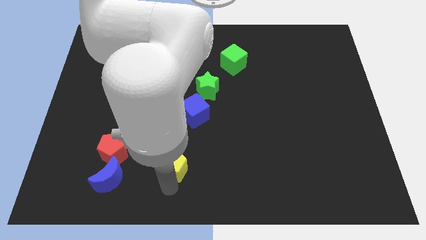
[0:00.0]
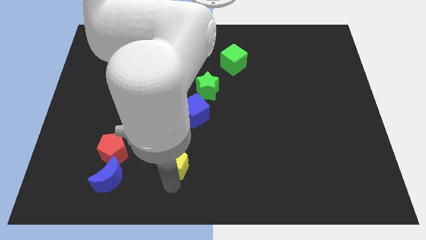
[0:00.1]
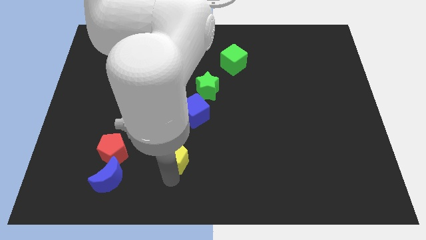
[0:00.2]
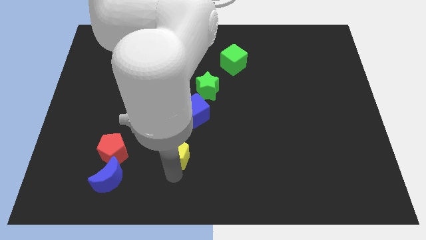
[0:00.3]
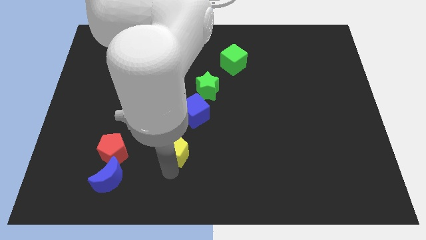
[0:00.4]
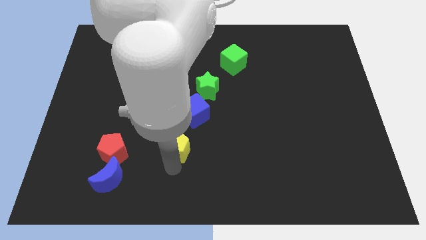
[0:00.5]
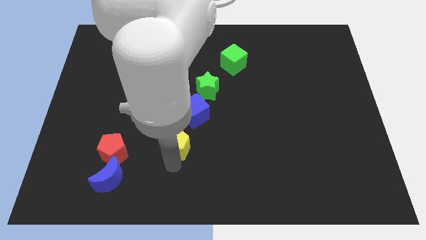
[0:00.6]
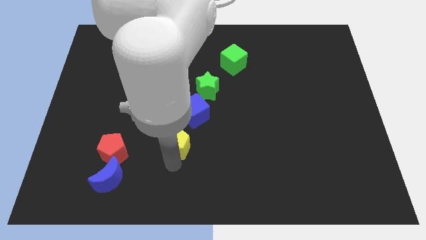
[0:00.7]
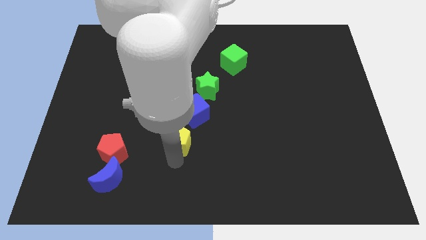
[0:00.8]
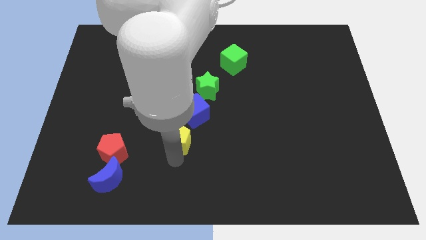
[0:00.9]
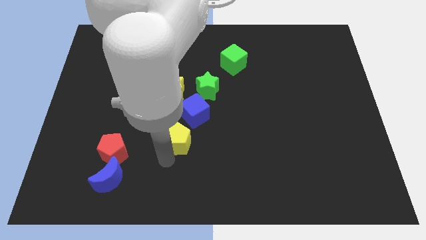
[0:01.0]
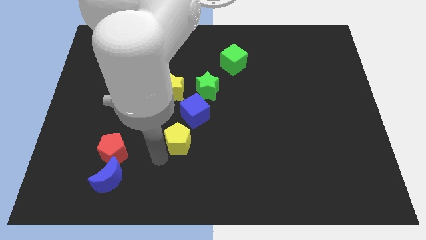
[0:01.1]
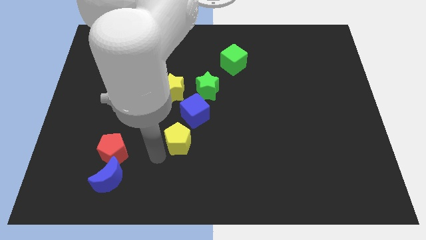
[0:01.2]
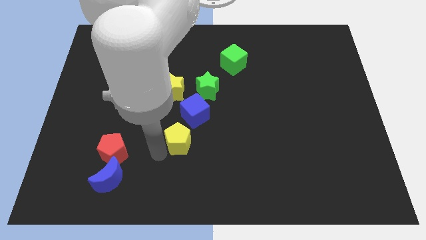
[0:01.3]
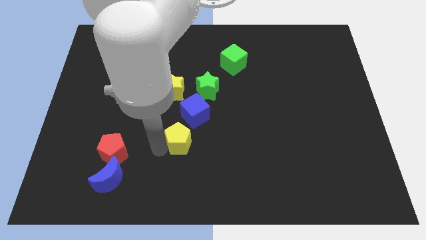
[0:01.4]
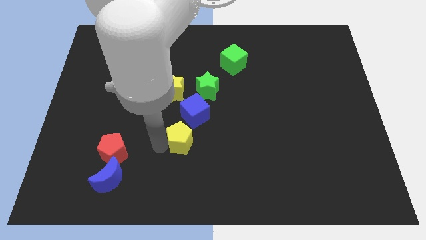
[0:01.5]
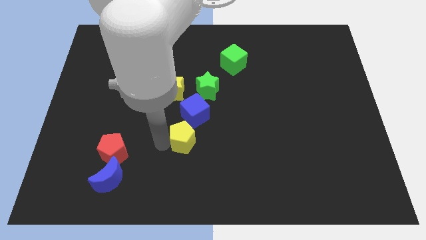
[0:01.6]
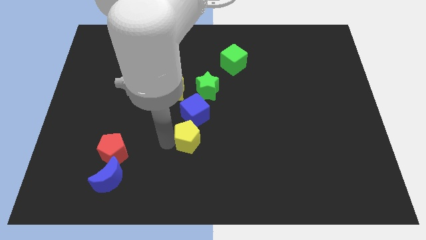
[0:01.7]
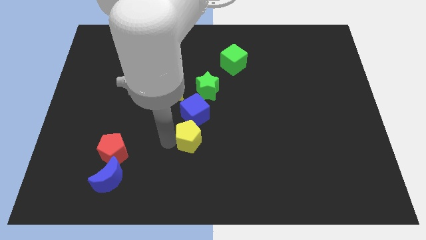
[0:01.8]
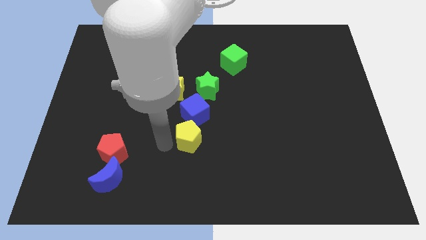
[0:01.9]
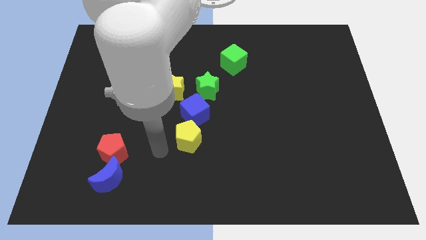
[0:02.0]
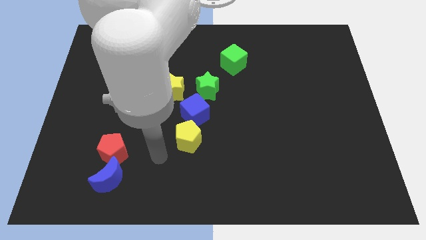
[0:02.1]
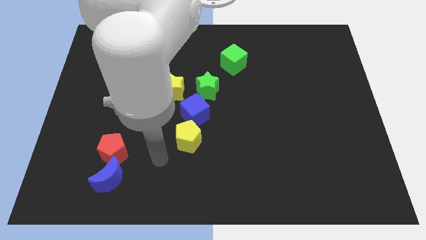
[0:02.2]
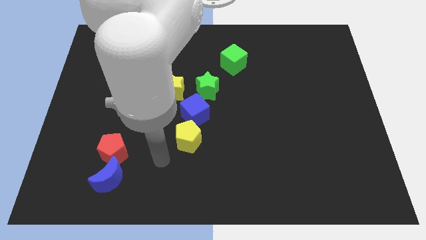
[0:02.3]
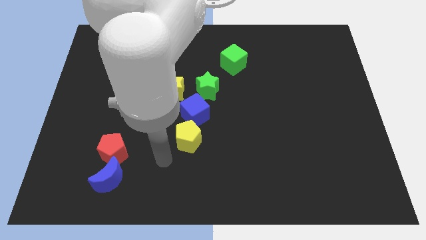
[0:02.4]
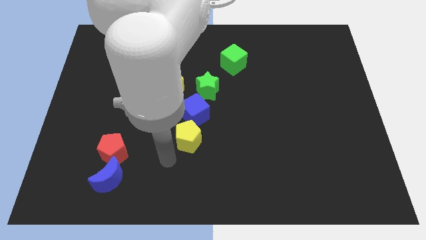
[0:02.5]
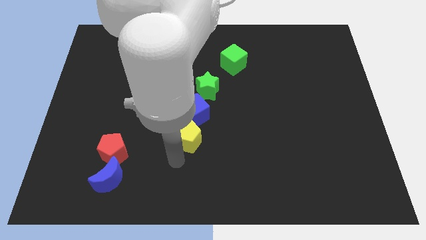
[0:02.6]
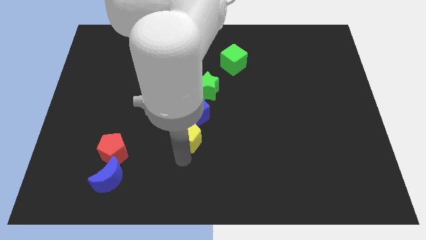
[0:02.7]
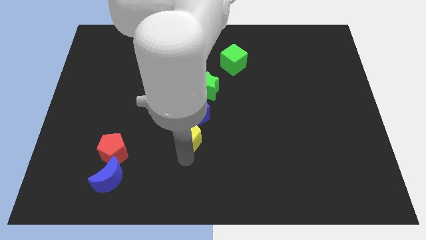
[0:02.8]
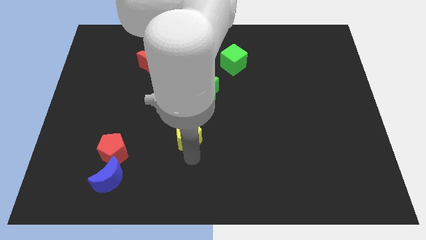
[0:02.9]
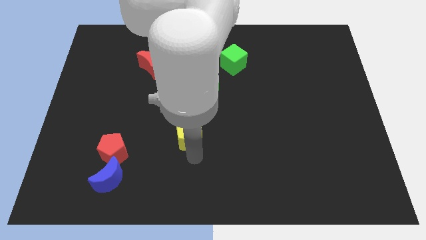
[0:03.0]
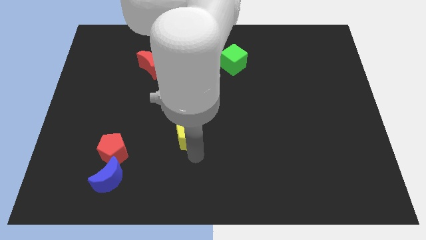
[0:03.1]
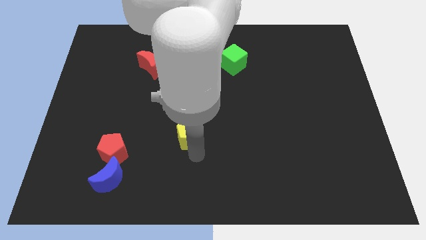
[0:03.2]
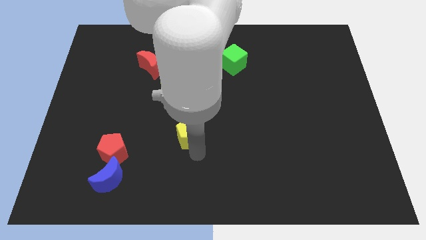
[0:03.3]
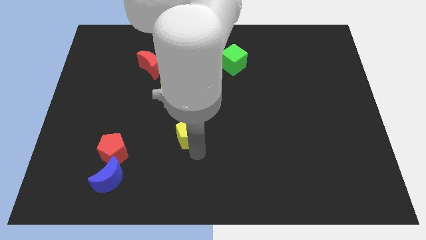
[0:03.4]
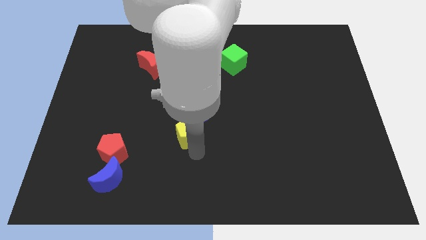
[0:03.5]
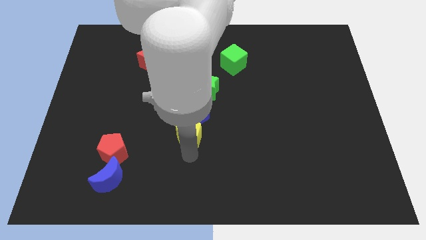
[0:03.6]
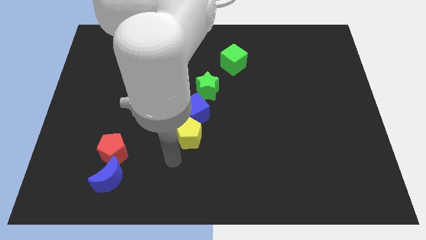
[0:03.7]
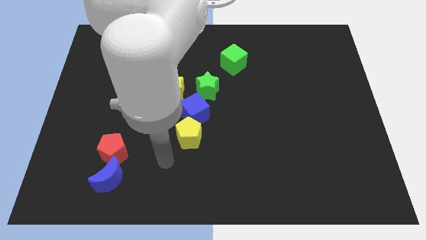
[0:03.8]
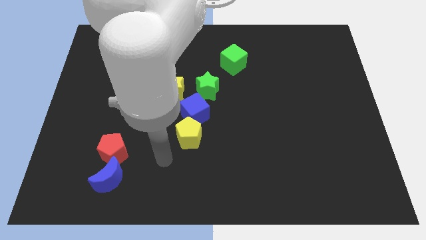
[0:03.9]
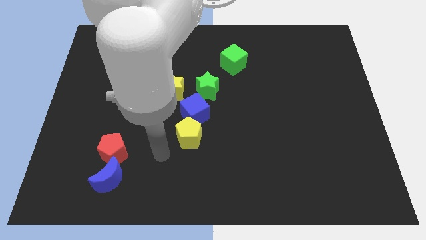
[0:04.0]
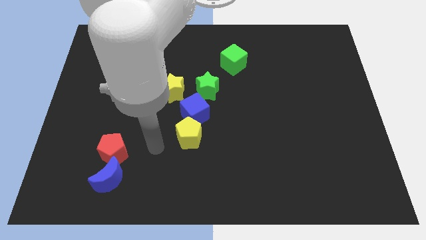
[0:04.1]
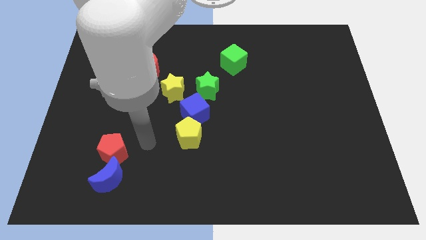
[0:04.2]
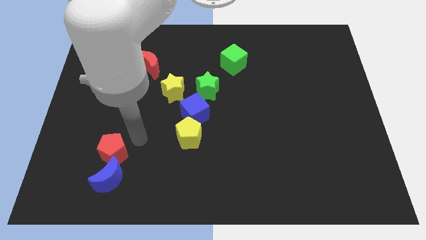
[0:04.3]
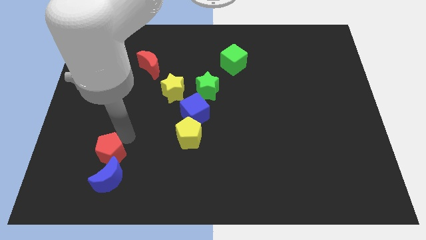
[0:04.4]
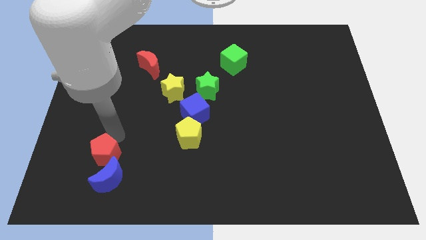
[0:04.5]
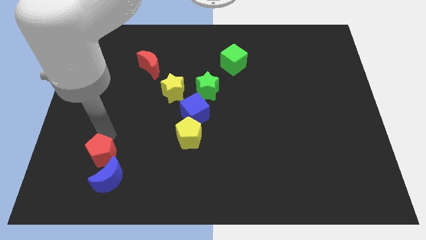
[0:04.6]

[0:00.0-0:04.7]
place the yellow pentagon below the blue cube

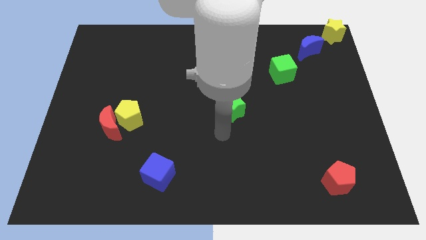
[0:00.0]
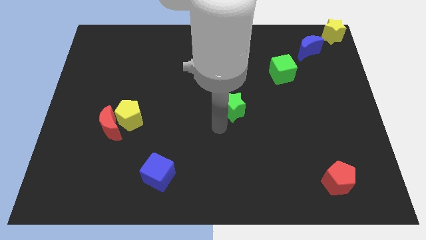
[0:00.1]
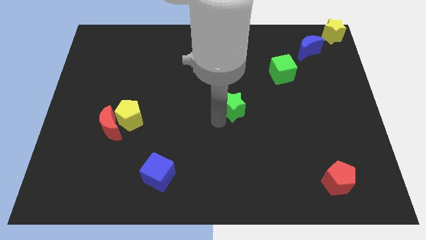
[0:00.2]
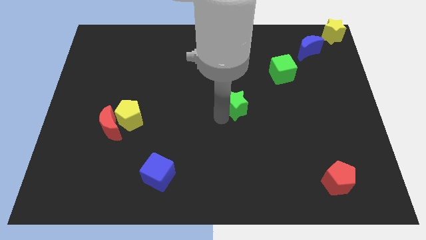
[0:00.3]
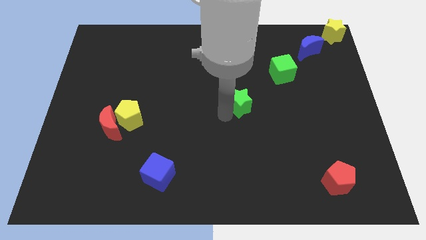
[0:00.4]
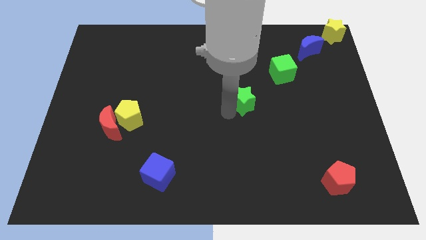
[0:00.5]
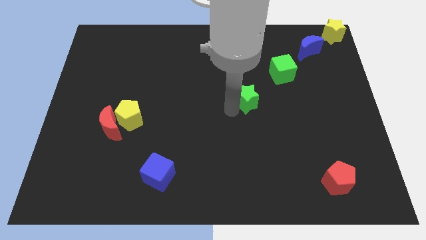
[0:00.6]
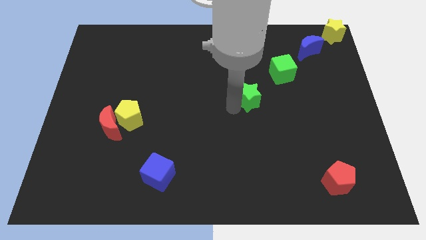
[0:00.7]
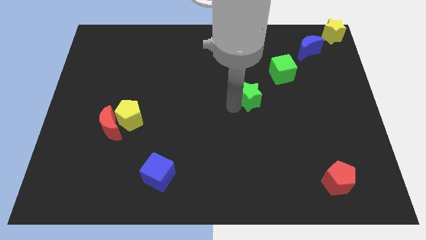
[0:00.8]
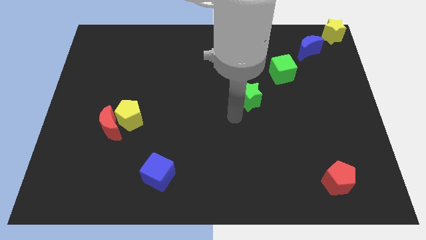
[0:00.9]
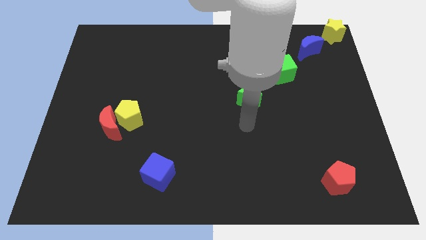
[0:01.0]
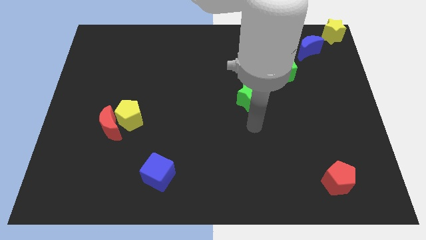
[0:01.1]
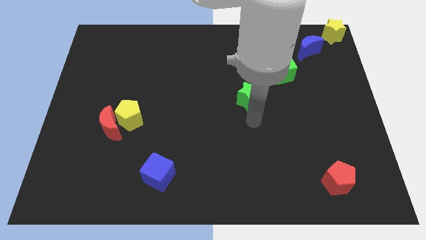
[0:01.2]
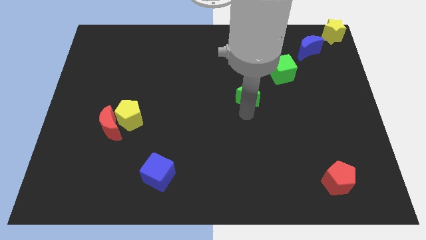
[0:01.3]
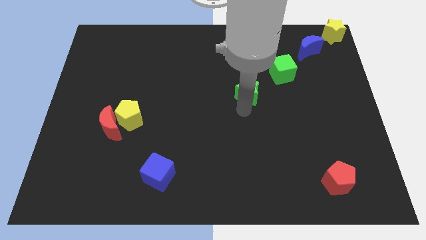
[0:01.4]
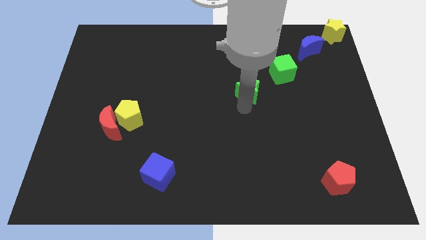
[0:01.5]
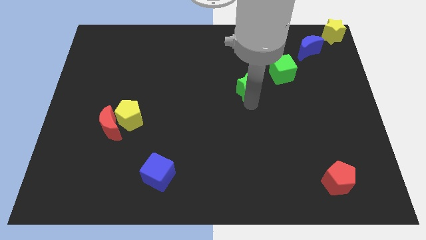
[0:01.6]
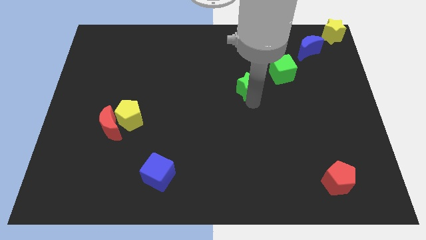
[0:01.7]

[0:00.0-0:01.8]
push the green star diagonal to the left of green cube

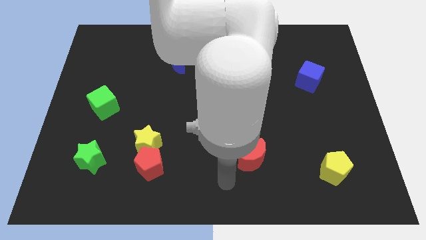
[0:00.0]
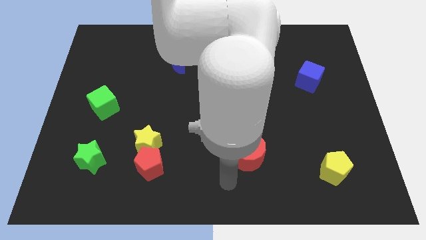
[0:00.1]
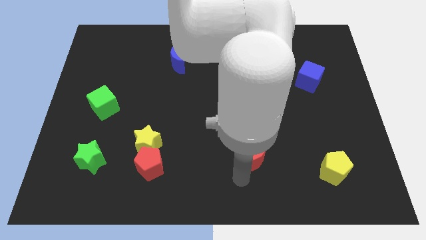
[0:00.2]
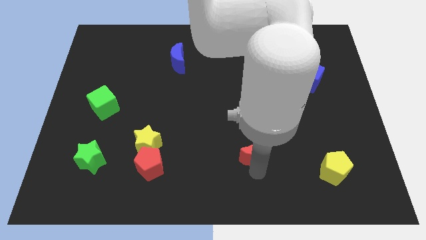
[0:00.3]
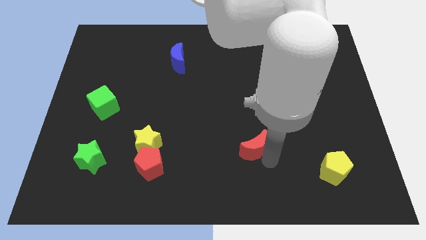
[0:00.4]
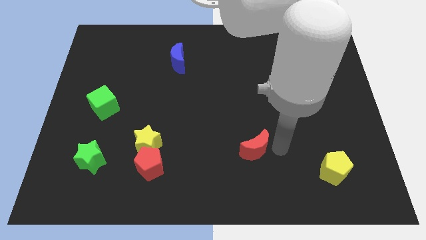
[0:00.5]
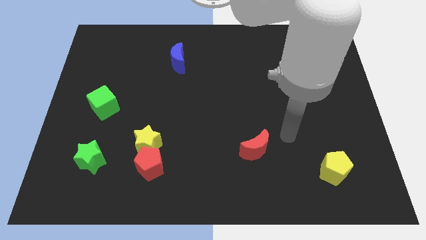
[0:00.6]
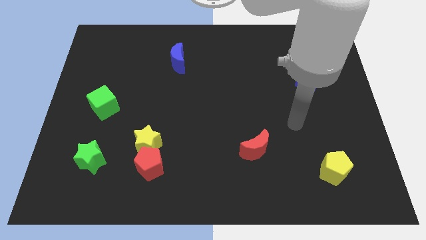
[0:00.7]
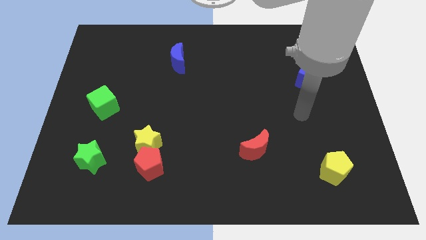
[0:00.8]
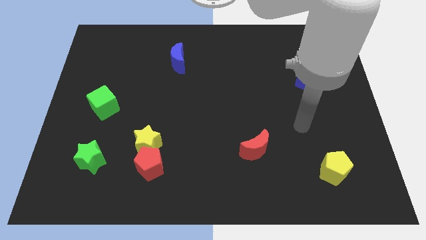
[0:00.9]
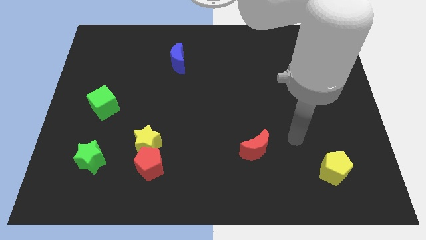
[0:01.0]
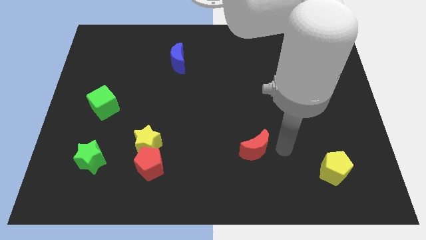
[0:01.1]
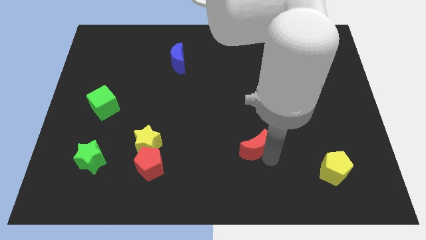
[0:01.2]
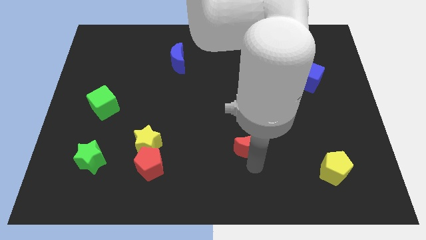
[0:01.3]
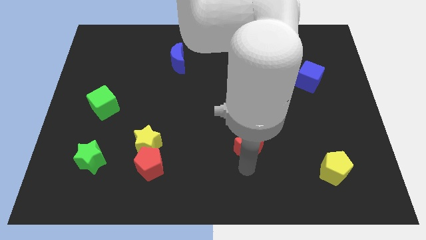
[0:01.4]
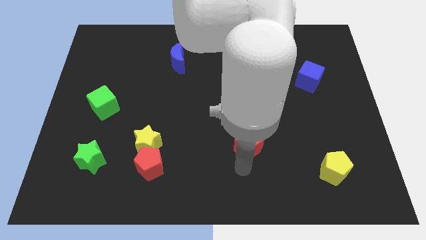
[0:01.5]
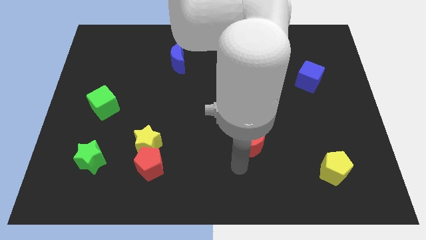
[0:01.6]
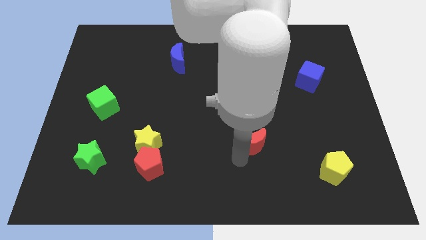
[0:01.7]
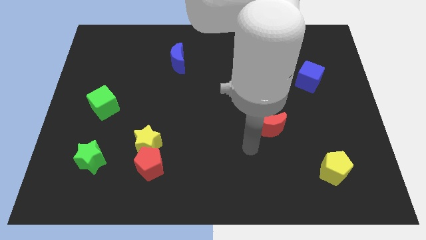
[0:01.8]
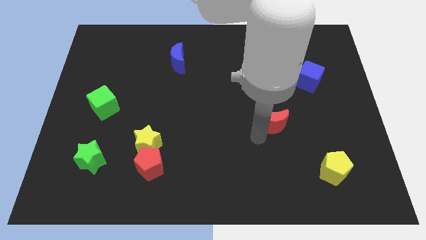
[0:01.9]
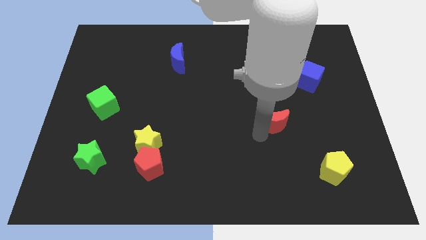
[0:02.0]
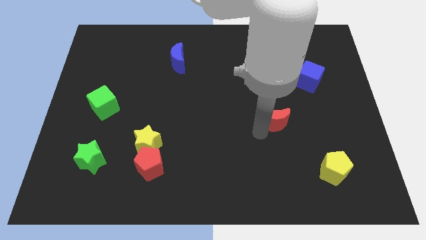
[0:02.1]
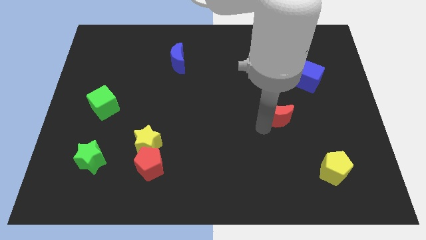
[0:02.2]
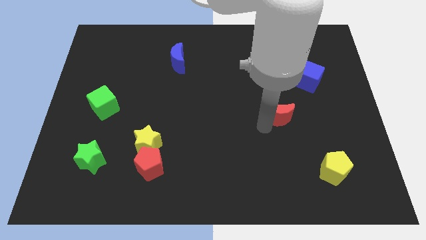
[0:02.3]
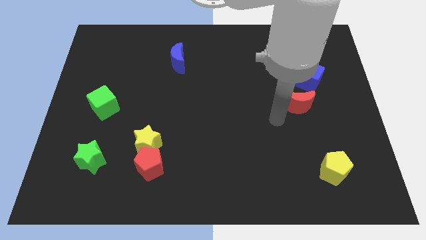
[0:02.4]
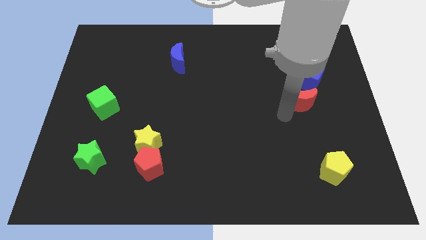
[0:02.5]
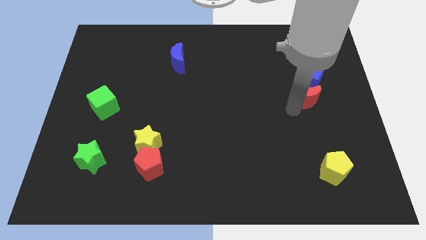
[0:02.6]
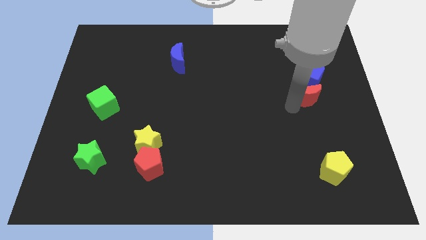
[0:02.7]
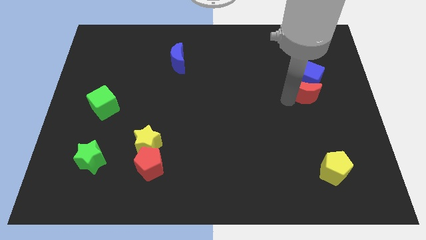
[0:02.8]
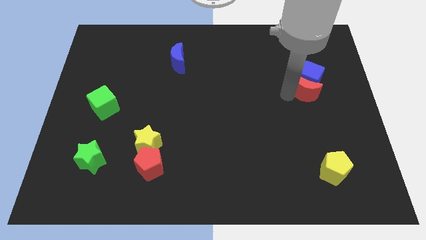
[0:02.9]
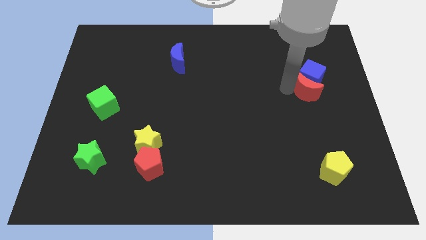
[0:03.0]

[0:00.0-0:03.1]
push red moon into blue cube
